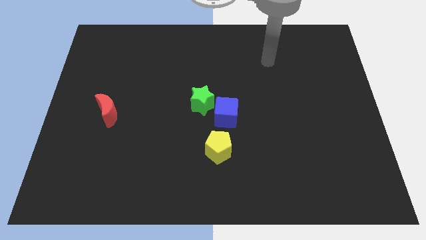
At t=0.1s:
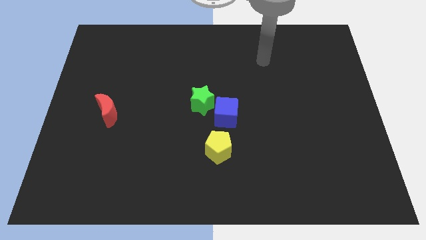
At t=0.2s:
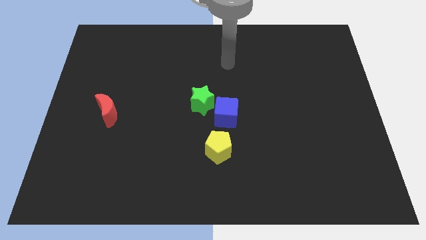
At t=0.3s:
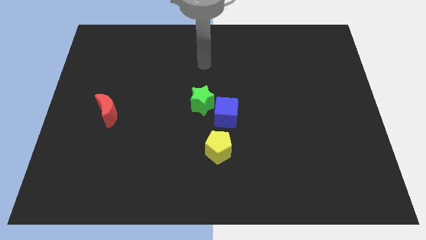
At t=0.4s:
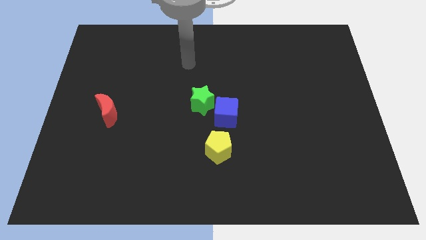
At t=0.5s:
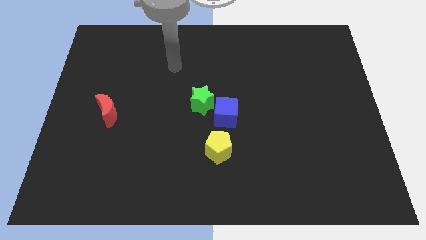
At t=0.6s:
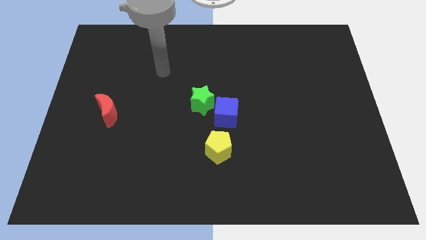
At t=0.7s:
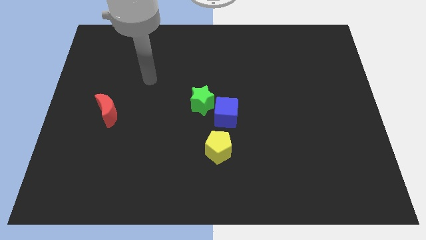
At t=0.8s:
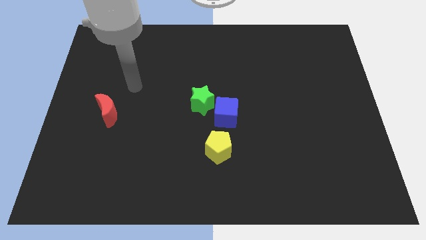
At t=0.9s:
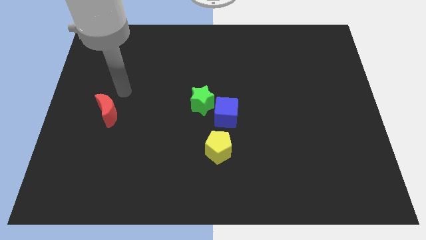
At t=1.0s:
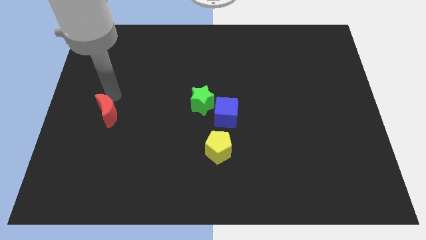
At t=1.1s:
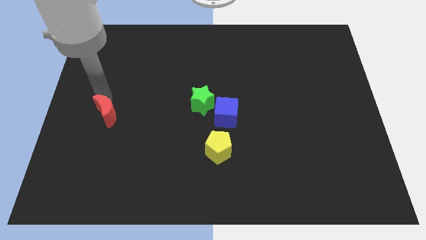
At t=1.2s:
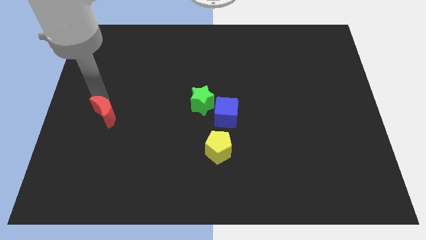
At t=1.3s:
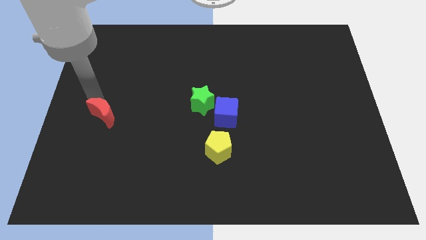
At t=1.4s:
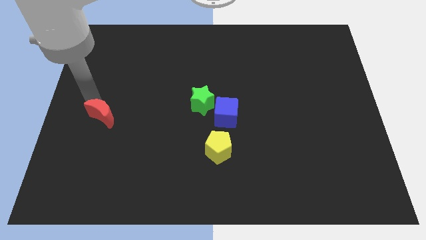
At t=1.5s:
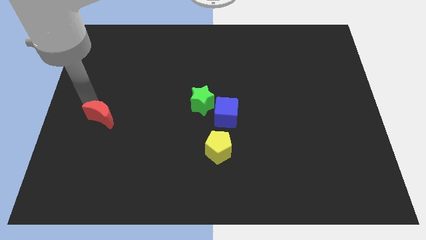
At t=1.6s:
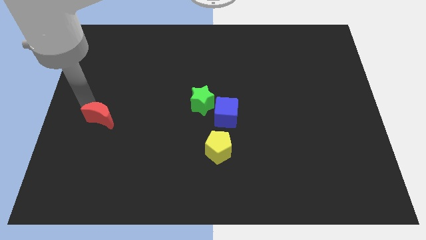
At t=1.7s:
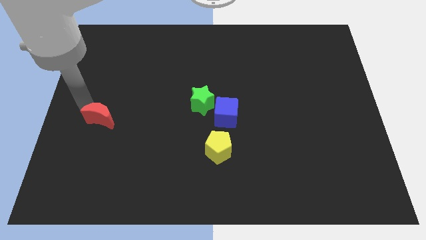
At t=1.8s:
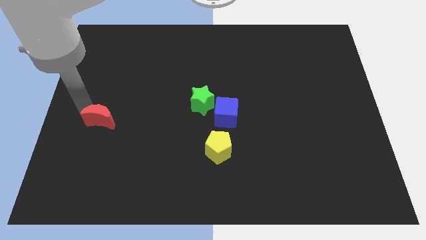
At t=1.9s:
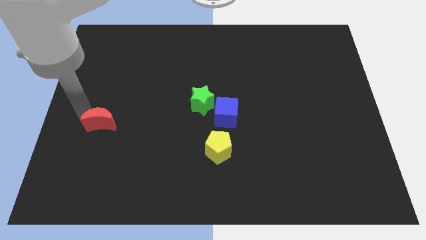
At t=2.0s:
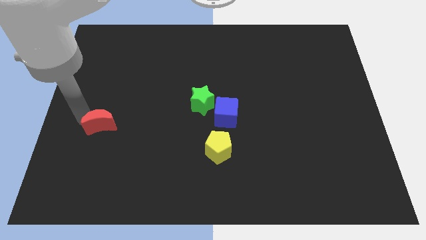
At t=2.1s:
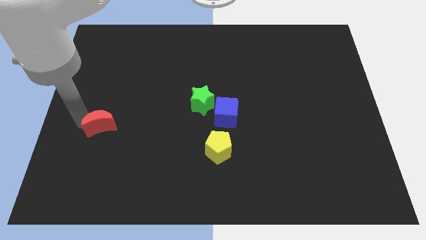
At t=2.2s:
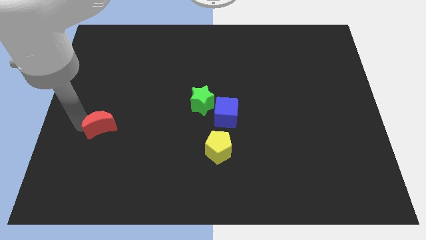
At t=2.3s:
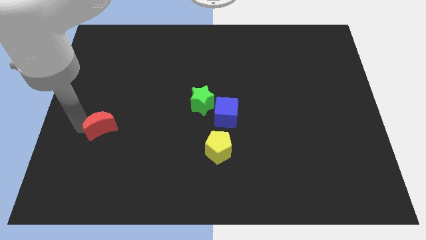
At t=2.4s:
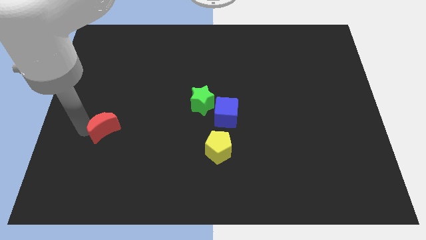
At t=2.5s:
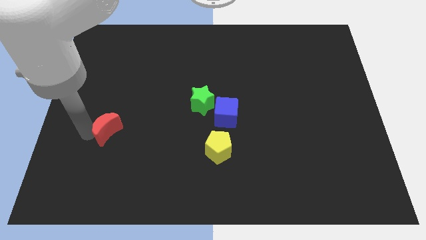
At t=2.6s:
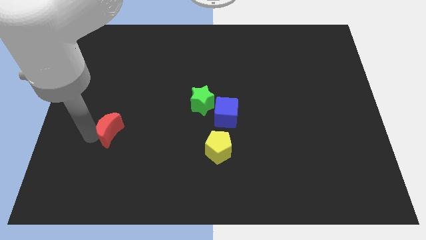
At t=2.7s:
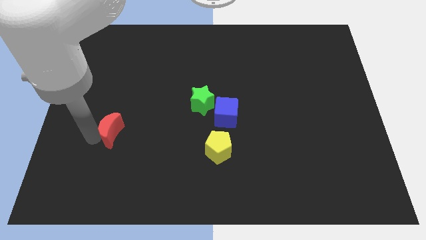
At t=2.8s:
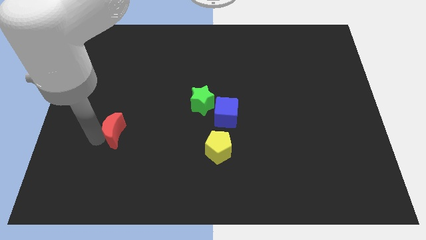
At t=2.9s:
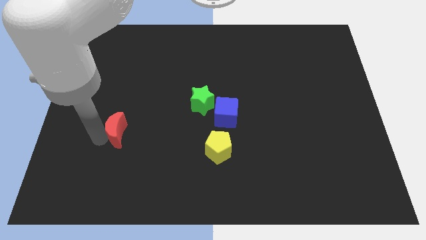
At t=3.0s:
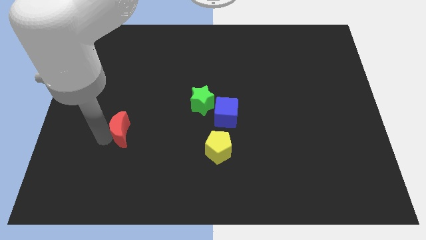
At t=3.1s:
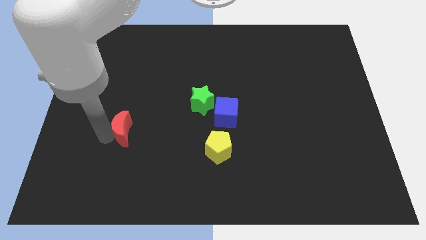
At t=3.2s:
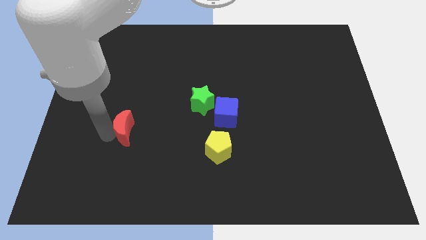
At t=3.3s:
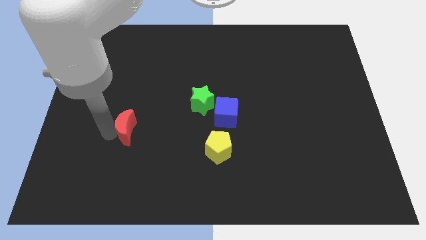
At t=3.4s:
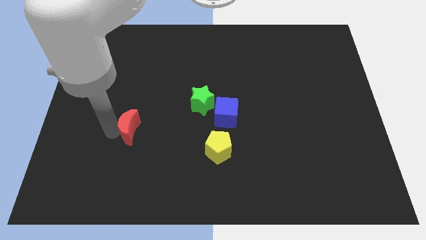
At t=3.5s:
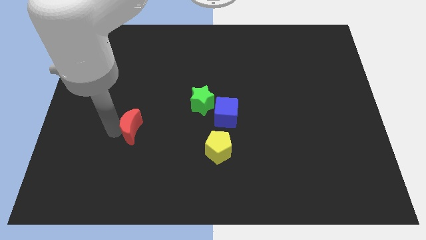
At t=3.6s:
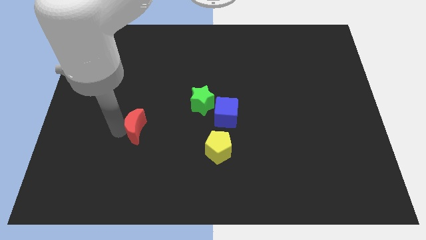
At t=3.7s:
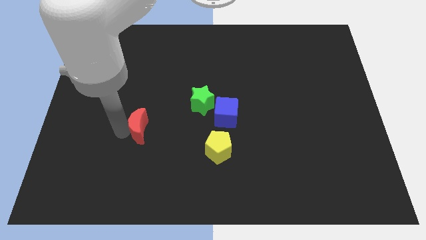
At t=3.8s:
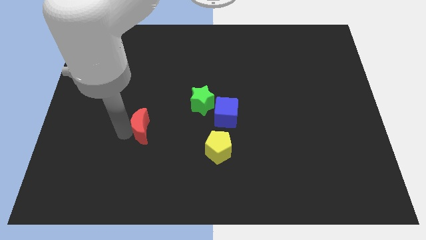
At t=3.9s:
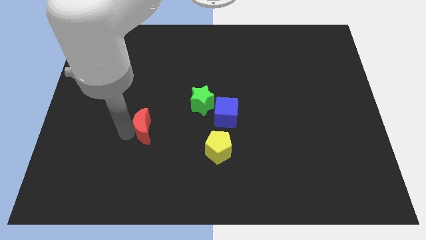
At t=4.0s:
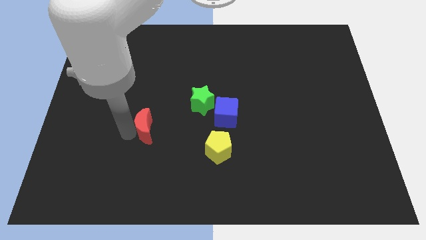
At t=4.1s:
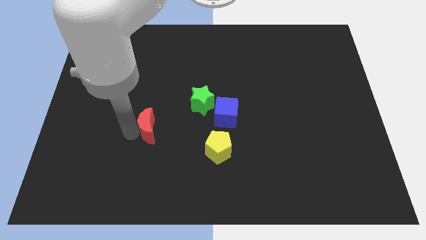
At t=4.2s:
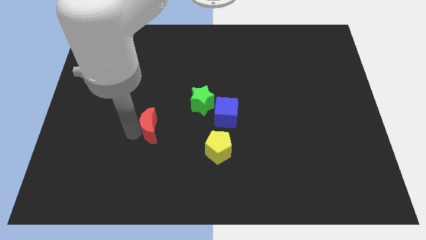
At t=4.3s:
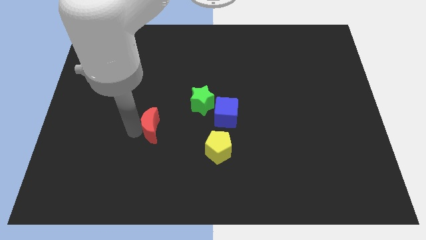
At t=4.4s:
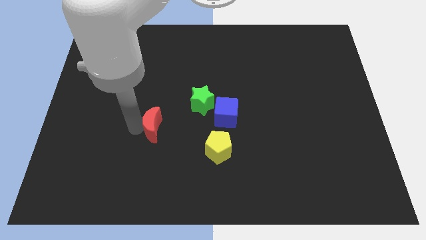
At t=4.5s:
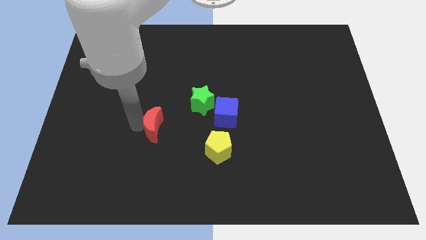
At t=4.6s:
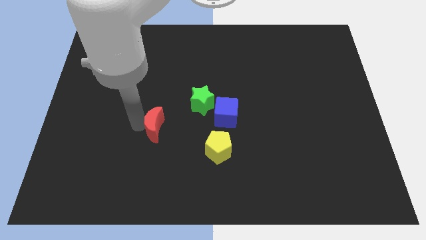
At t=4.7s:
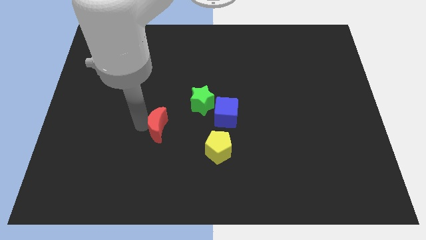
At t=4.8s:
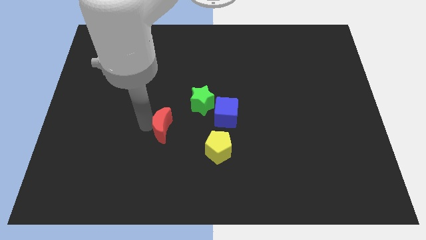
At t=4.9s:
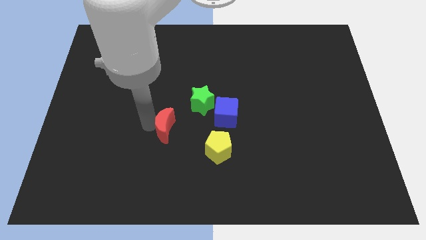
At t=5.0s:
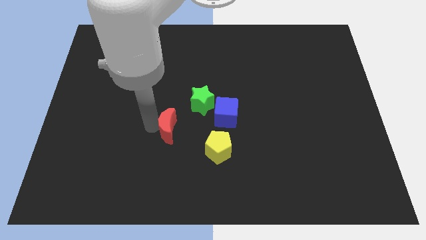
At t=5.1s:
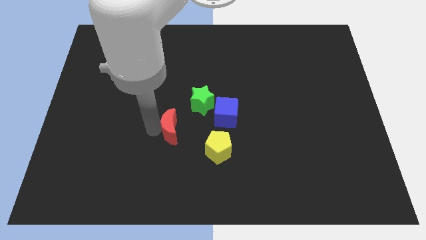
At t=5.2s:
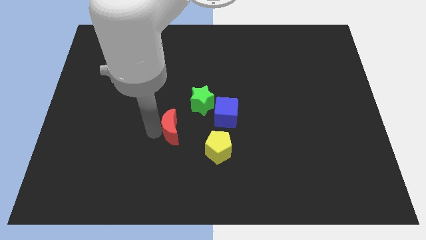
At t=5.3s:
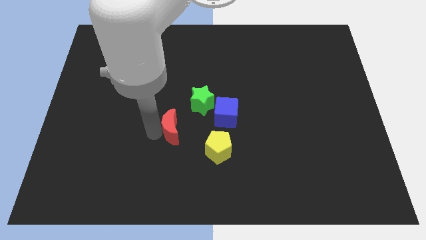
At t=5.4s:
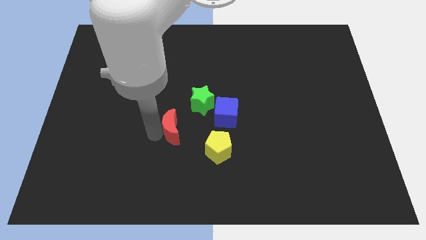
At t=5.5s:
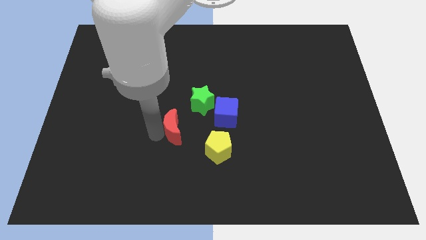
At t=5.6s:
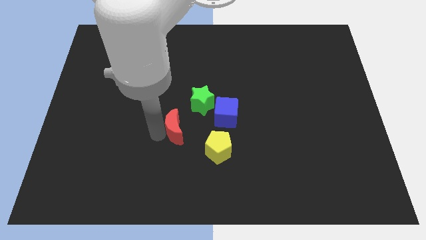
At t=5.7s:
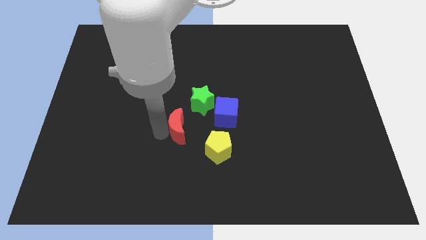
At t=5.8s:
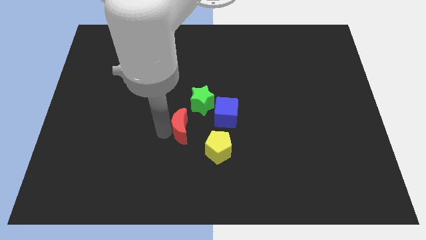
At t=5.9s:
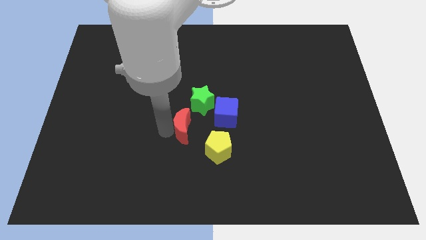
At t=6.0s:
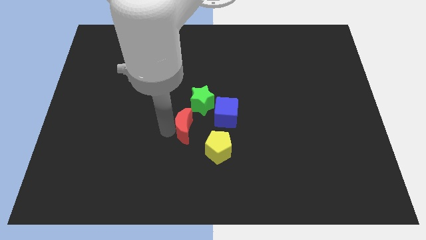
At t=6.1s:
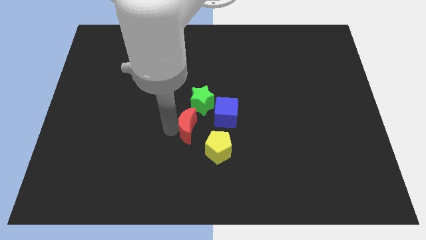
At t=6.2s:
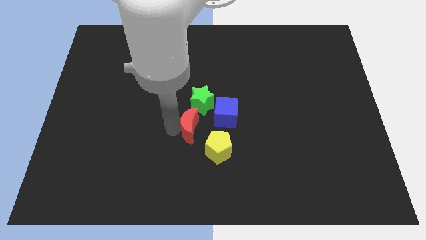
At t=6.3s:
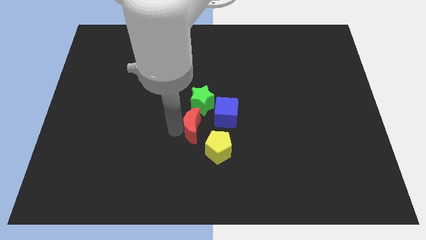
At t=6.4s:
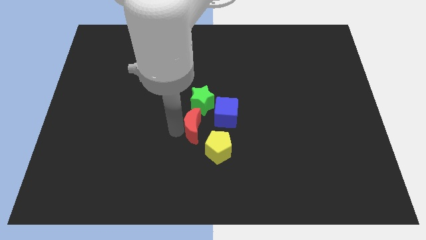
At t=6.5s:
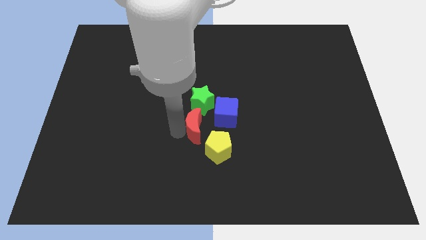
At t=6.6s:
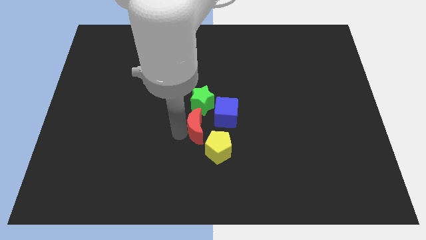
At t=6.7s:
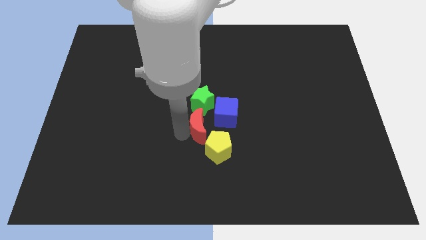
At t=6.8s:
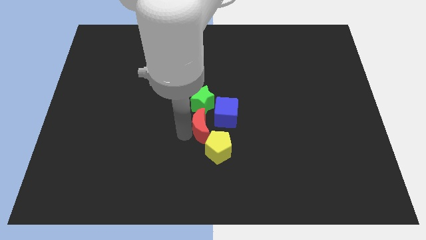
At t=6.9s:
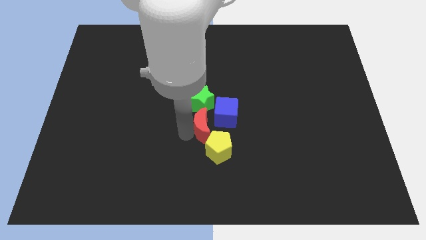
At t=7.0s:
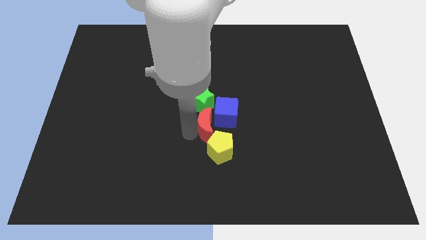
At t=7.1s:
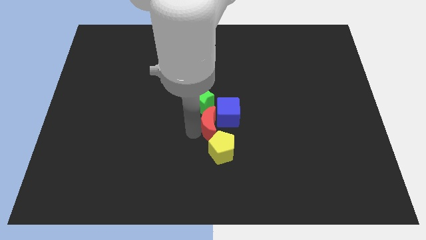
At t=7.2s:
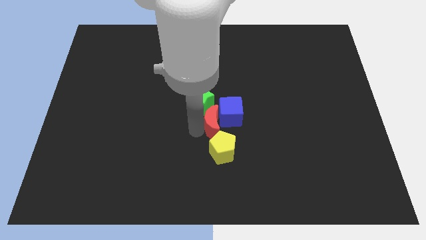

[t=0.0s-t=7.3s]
put the red block to the blue cube

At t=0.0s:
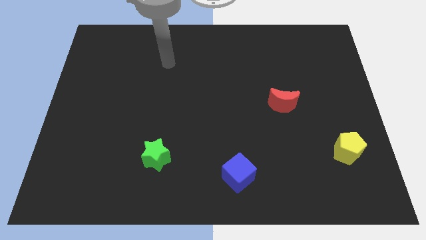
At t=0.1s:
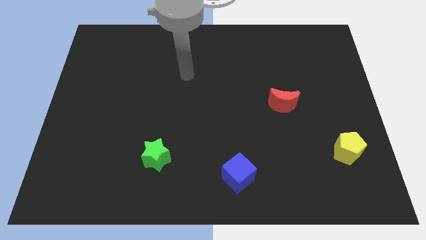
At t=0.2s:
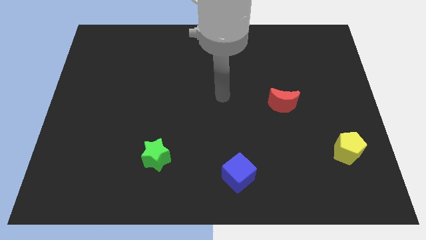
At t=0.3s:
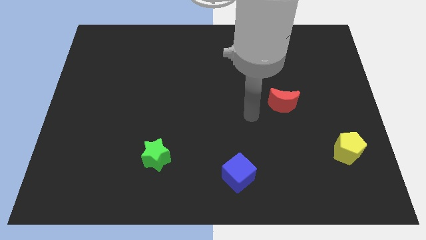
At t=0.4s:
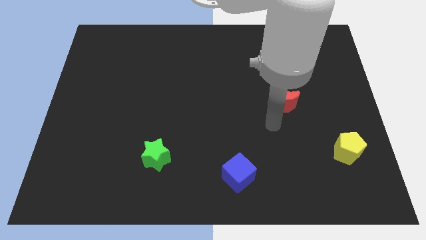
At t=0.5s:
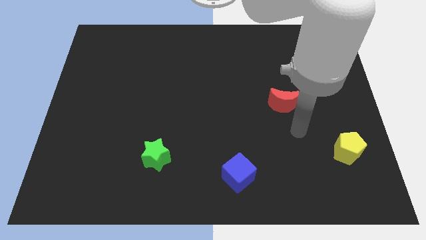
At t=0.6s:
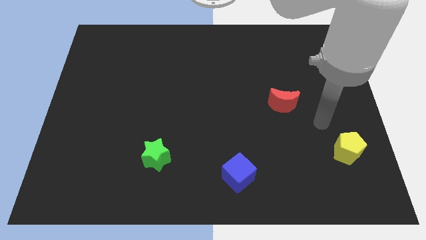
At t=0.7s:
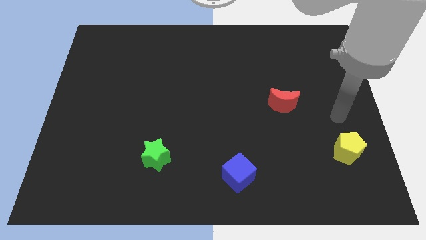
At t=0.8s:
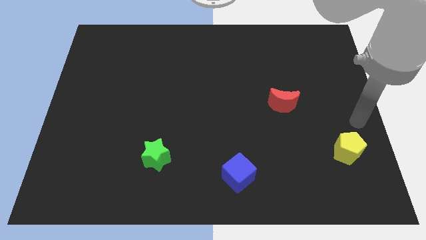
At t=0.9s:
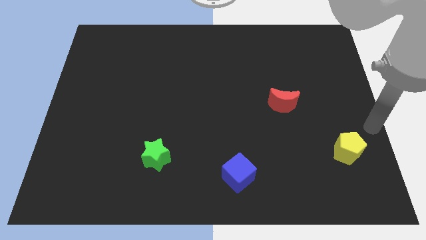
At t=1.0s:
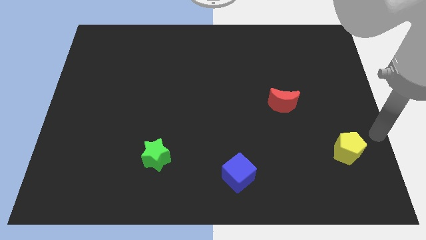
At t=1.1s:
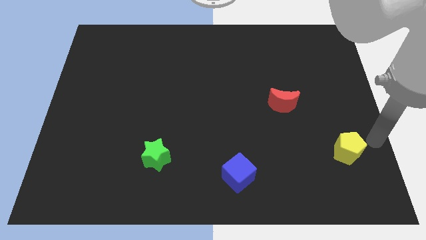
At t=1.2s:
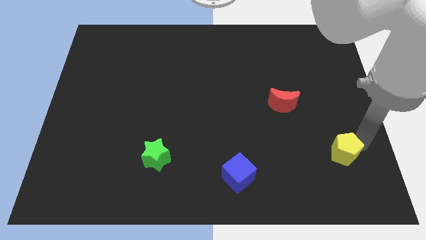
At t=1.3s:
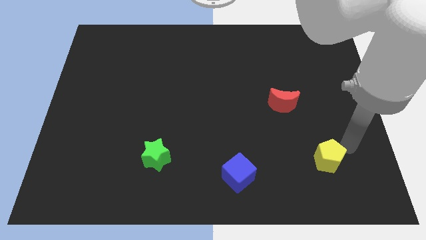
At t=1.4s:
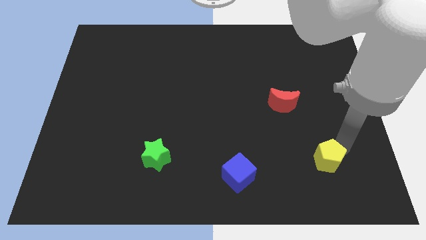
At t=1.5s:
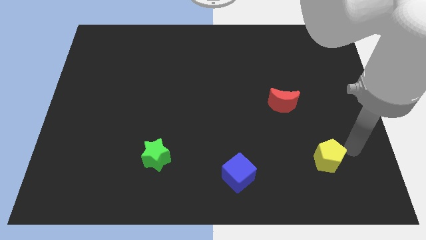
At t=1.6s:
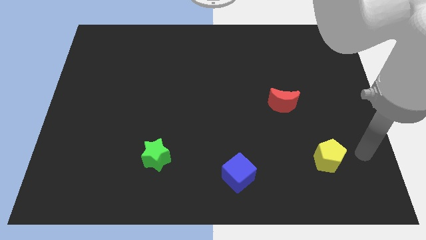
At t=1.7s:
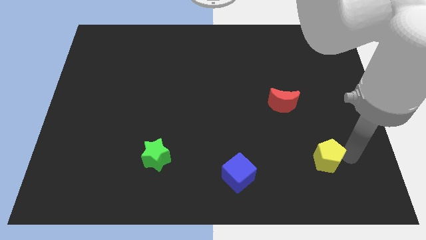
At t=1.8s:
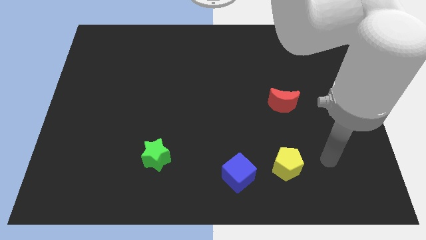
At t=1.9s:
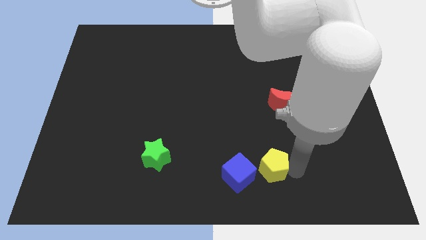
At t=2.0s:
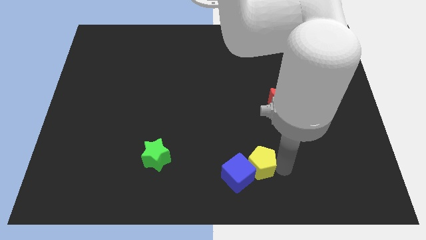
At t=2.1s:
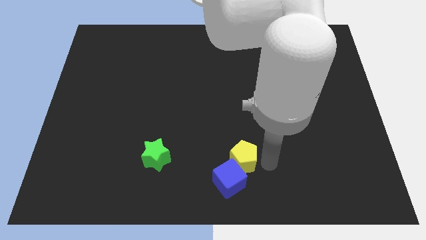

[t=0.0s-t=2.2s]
push the yellow pentagon towards the cube
